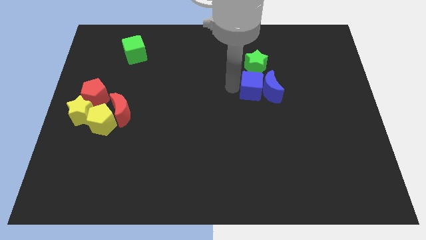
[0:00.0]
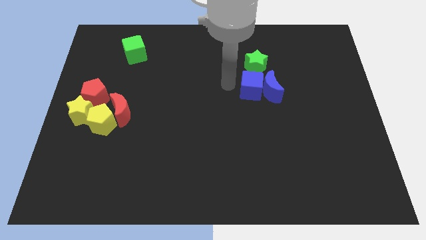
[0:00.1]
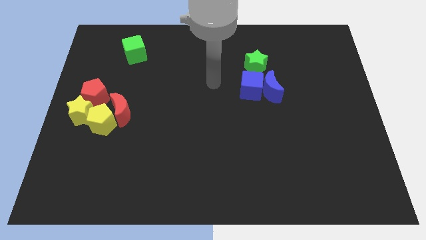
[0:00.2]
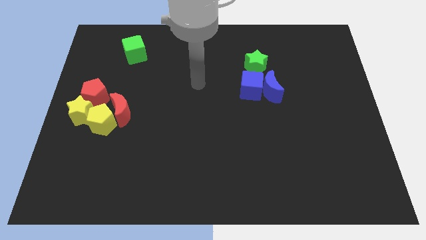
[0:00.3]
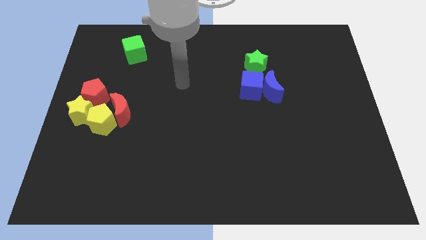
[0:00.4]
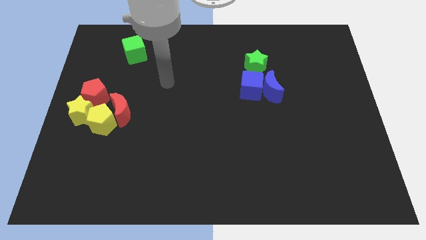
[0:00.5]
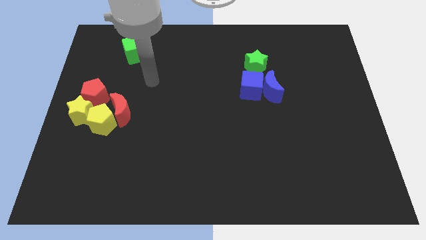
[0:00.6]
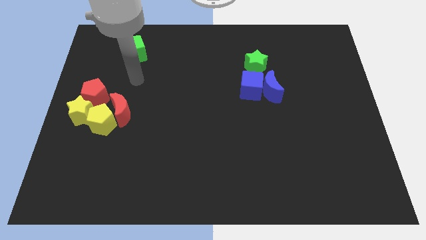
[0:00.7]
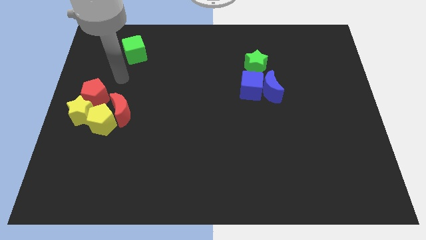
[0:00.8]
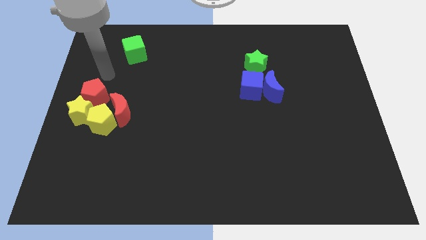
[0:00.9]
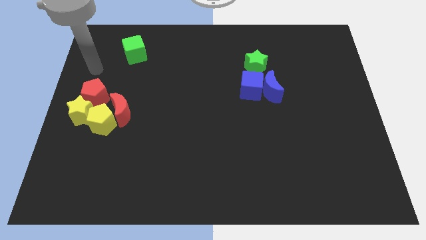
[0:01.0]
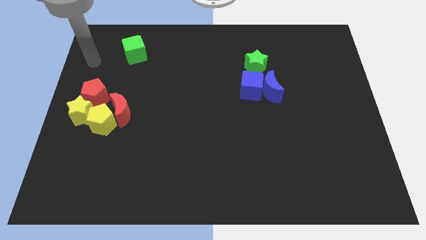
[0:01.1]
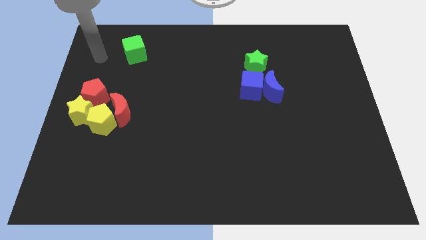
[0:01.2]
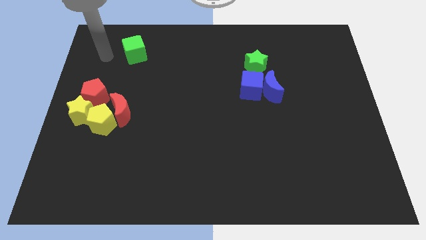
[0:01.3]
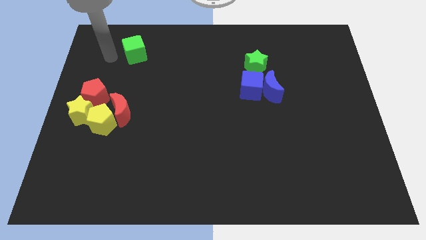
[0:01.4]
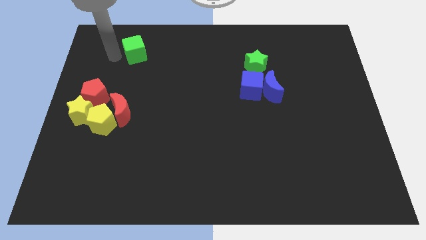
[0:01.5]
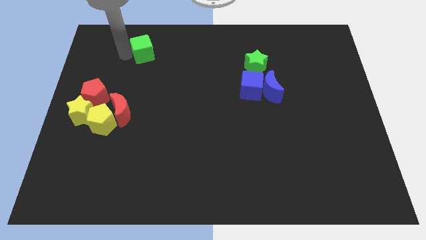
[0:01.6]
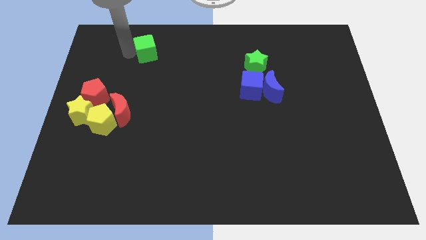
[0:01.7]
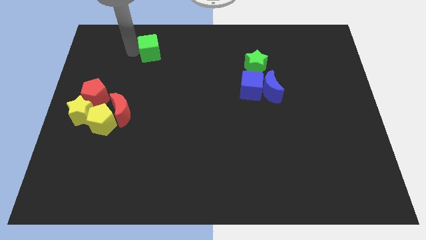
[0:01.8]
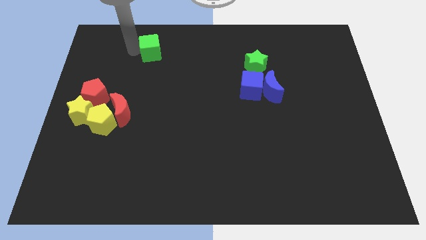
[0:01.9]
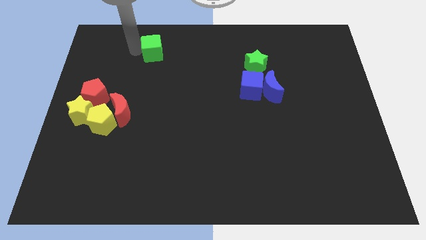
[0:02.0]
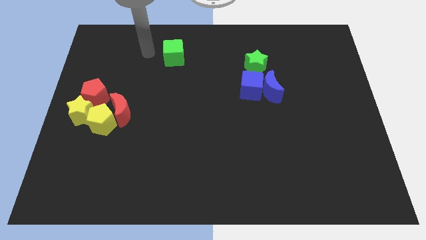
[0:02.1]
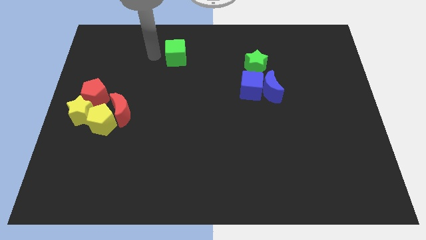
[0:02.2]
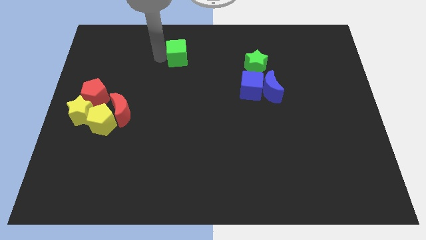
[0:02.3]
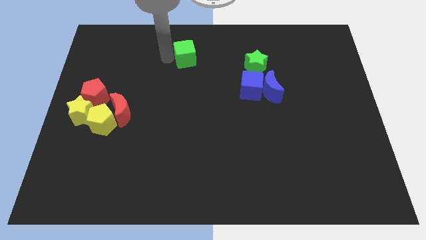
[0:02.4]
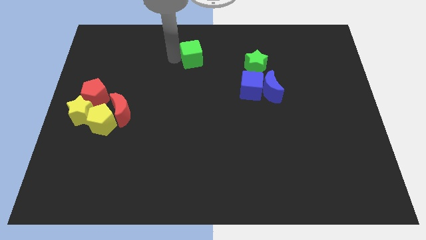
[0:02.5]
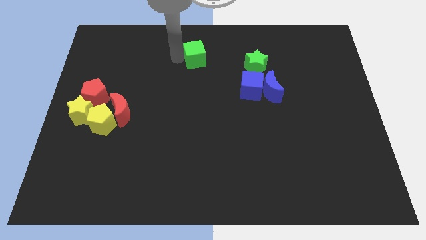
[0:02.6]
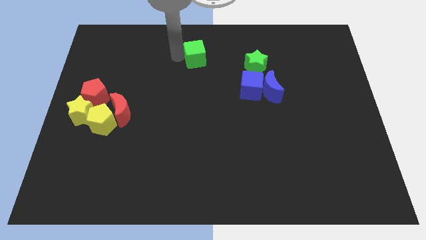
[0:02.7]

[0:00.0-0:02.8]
push the green cube towards the green star

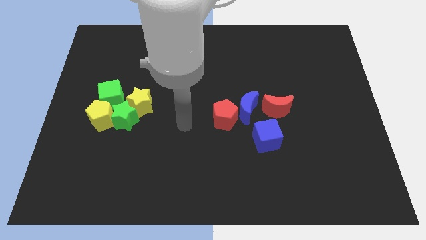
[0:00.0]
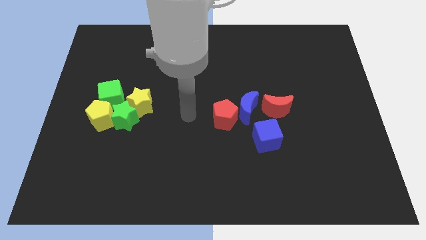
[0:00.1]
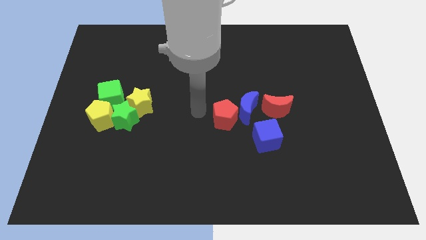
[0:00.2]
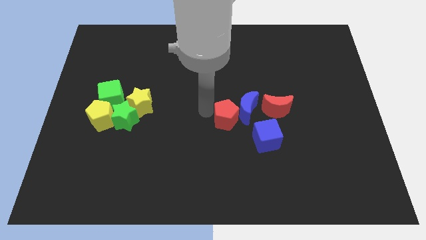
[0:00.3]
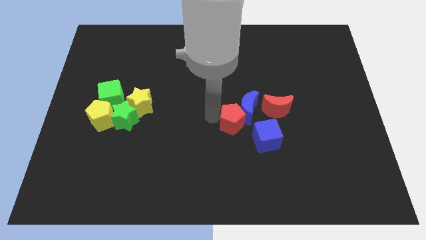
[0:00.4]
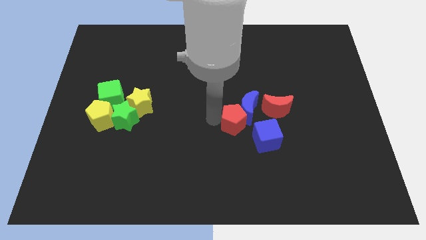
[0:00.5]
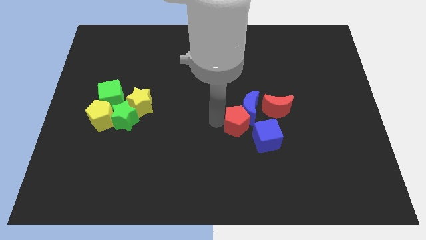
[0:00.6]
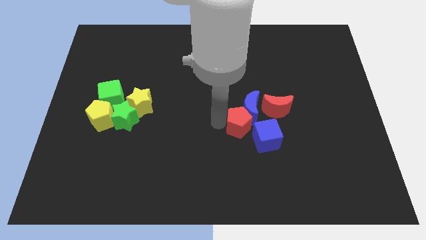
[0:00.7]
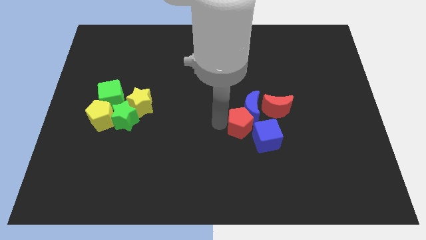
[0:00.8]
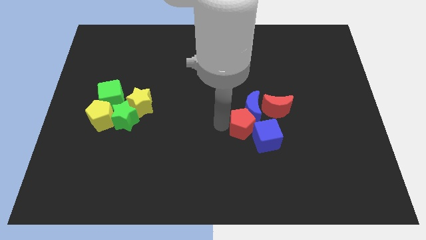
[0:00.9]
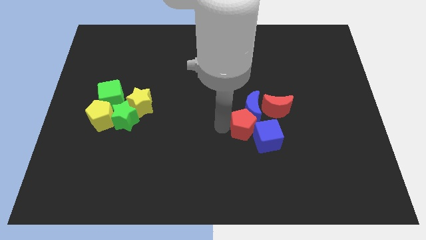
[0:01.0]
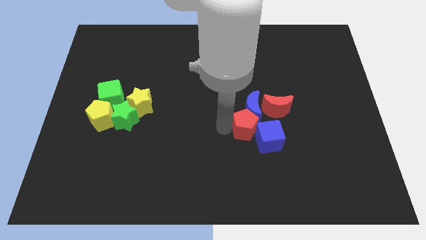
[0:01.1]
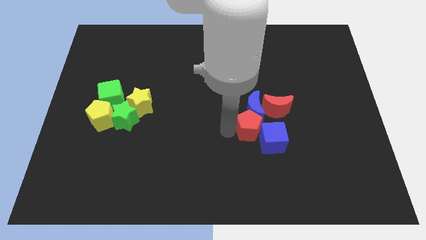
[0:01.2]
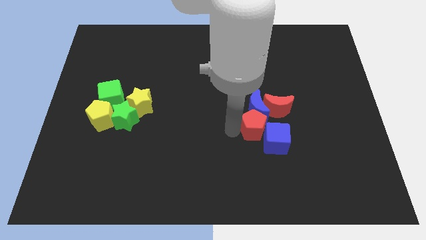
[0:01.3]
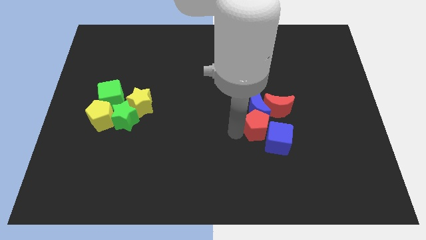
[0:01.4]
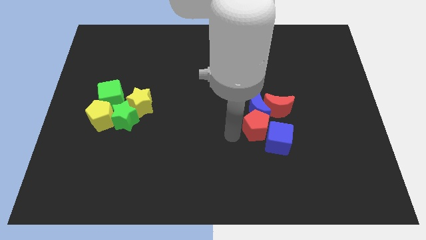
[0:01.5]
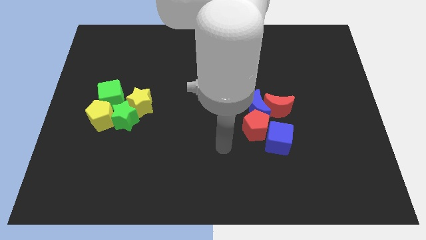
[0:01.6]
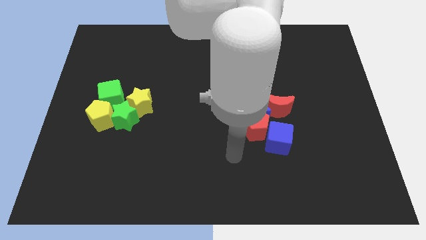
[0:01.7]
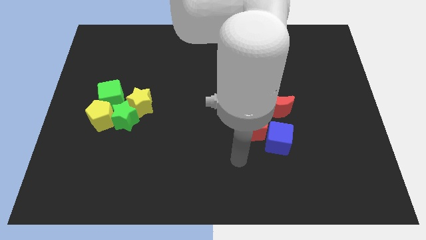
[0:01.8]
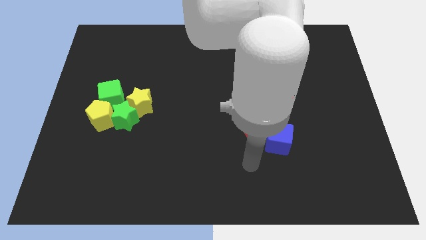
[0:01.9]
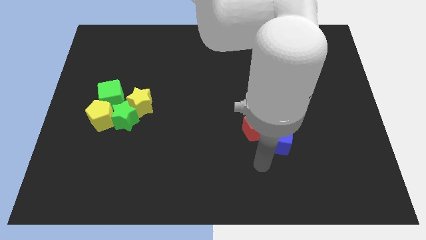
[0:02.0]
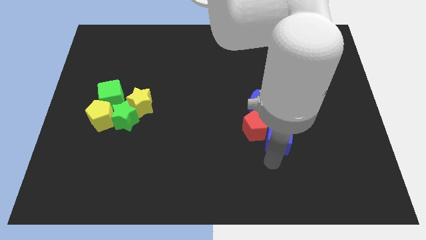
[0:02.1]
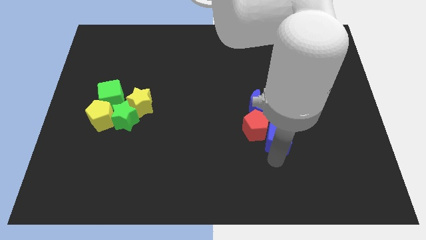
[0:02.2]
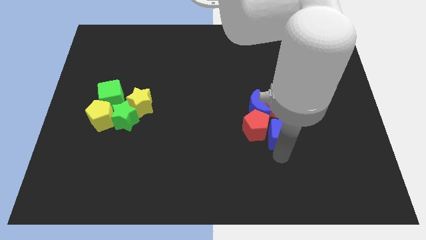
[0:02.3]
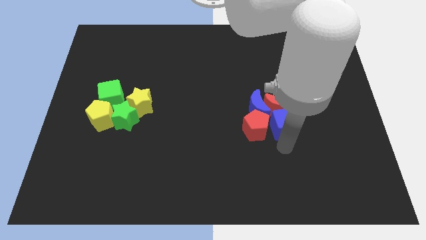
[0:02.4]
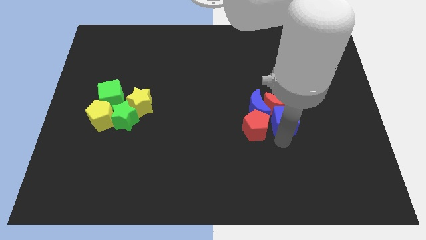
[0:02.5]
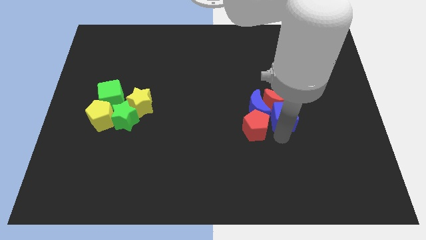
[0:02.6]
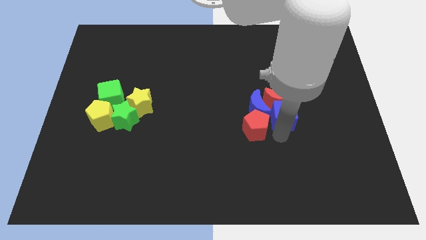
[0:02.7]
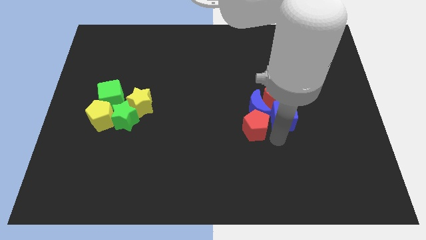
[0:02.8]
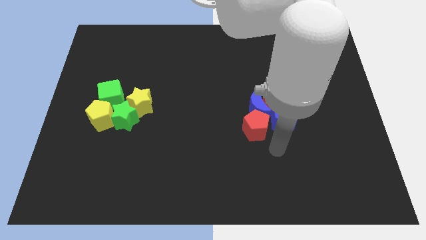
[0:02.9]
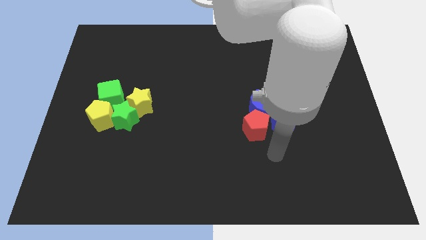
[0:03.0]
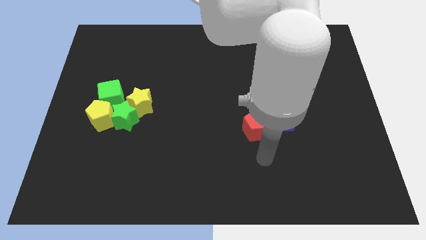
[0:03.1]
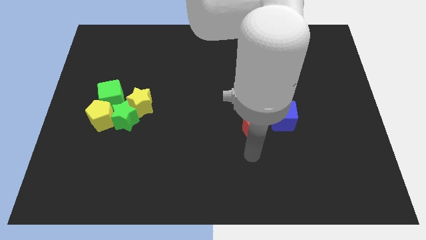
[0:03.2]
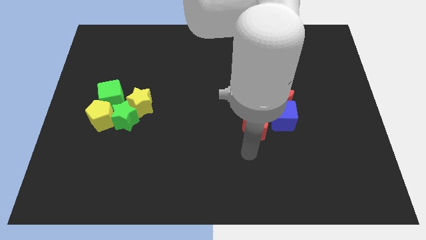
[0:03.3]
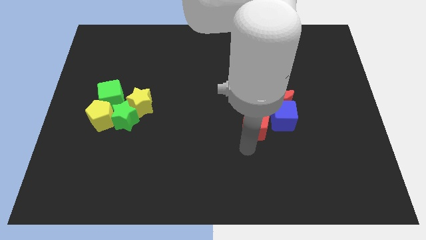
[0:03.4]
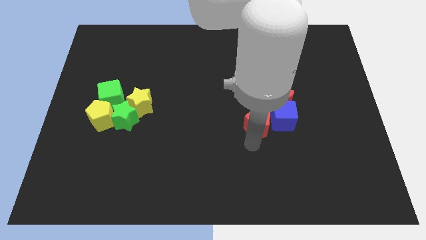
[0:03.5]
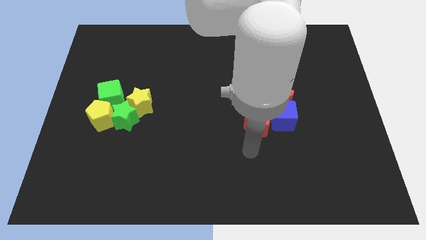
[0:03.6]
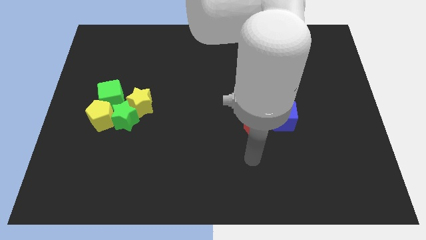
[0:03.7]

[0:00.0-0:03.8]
adjust the red blocks and blue blocks to form a group

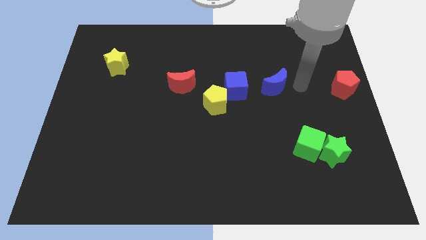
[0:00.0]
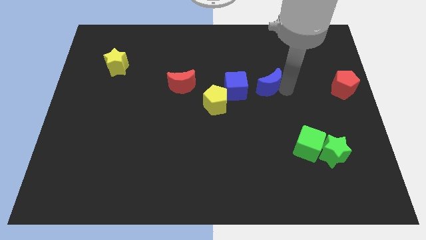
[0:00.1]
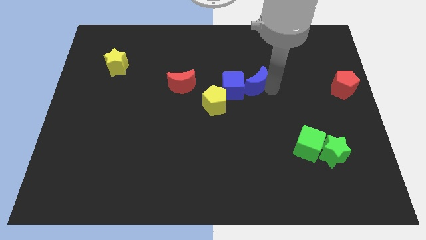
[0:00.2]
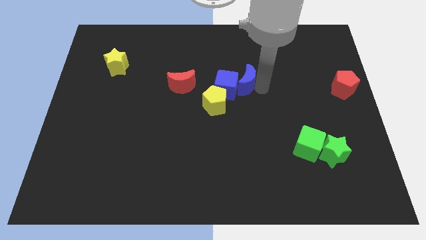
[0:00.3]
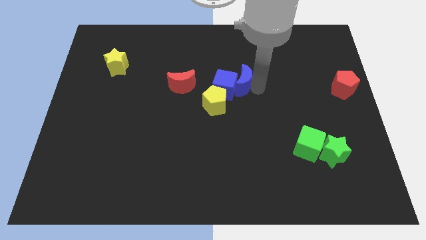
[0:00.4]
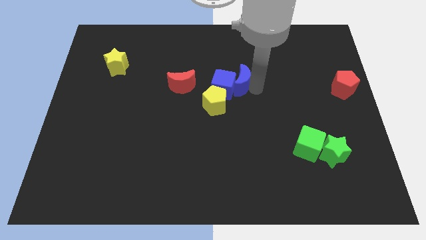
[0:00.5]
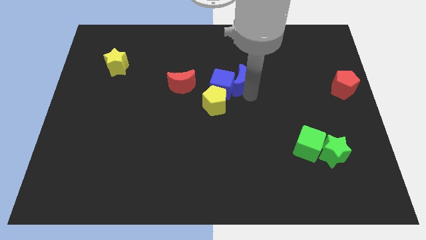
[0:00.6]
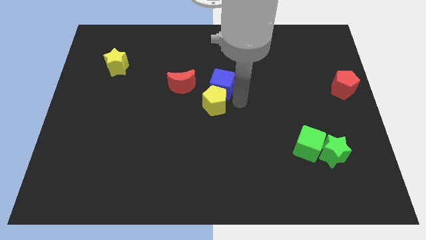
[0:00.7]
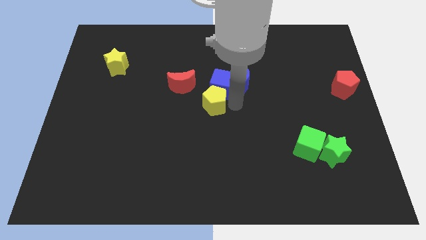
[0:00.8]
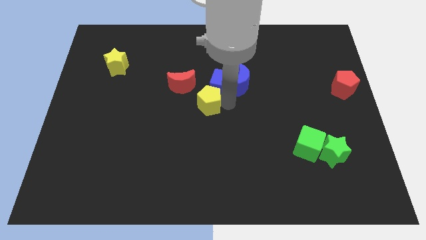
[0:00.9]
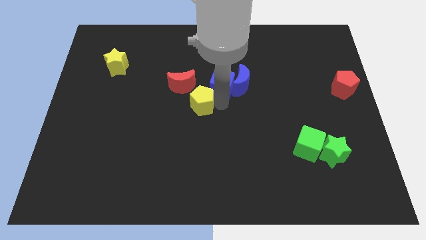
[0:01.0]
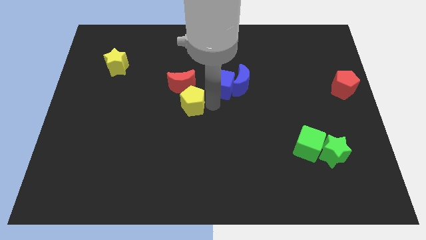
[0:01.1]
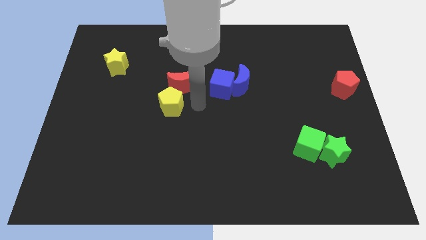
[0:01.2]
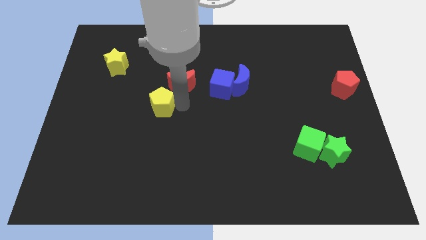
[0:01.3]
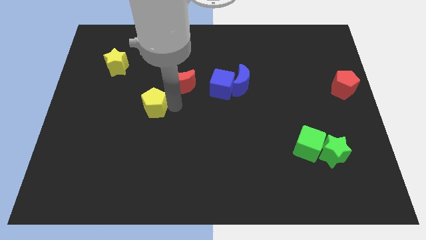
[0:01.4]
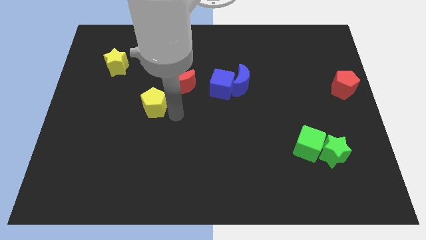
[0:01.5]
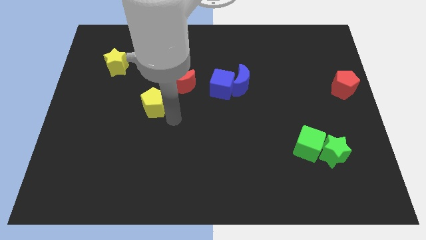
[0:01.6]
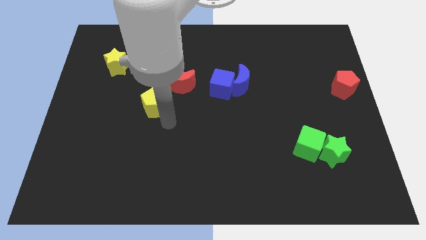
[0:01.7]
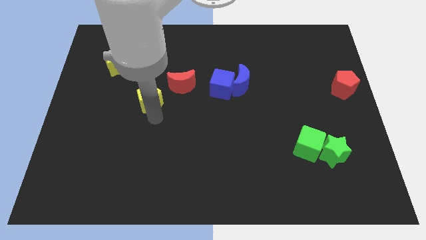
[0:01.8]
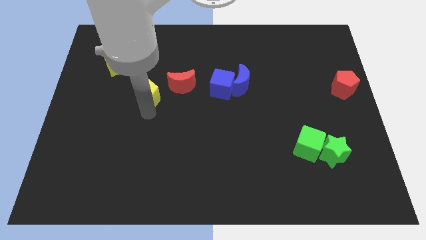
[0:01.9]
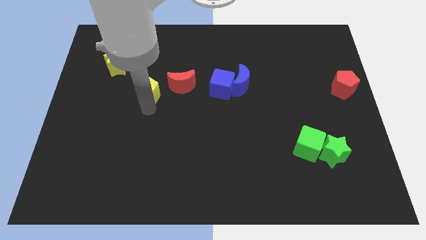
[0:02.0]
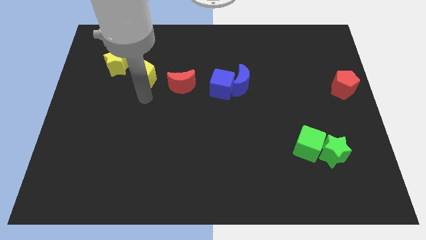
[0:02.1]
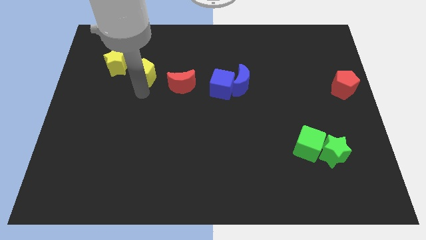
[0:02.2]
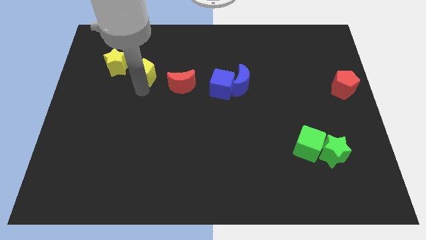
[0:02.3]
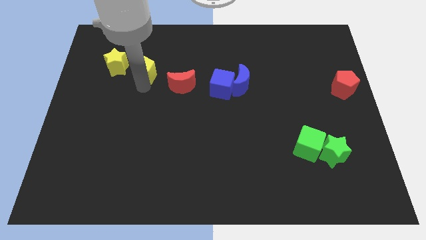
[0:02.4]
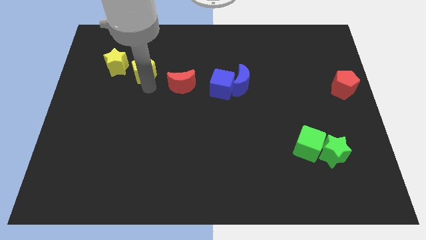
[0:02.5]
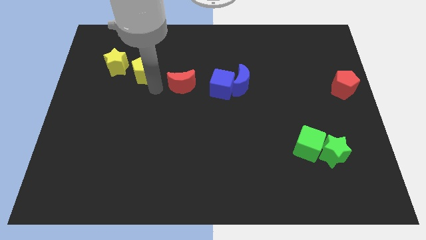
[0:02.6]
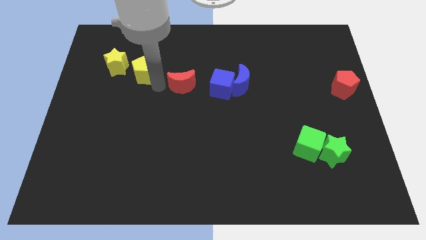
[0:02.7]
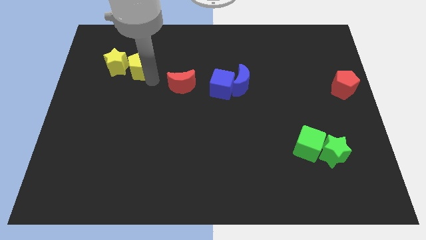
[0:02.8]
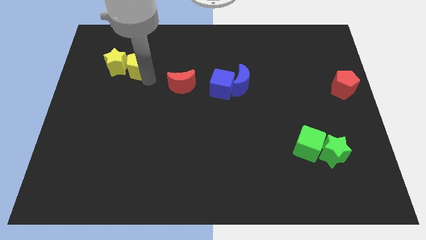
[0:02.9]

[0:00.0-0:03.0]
move yellow pentagon right to the yellow star
